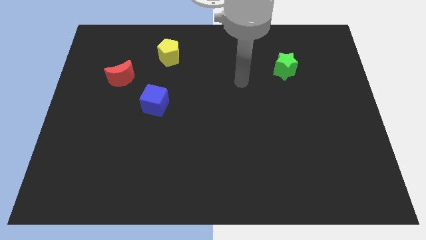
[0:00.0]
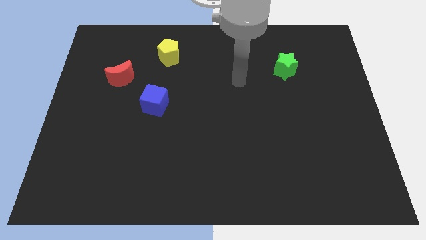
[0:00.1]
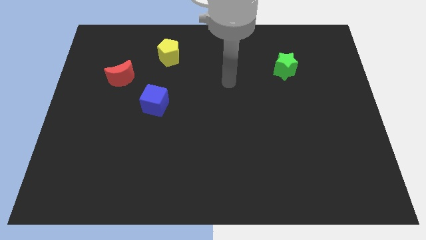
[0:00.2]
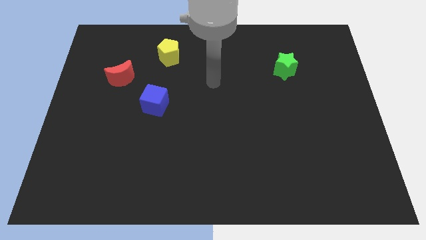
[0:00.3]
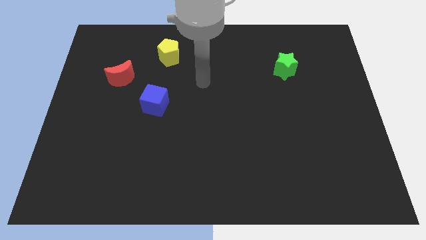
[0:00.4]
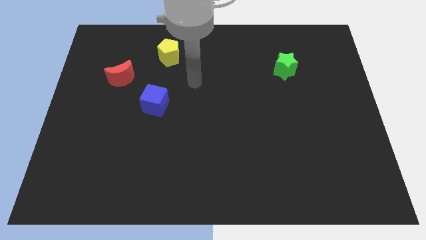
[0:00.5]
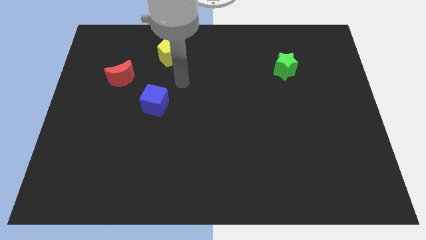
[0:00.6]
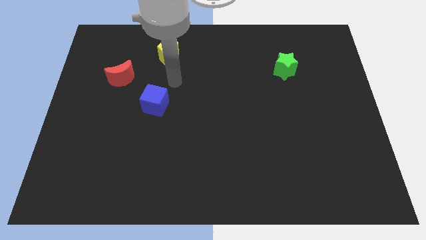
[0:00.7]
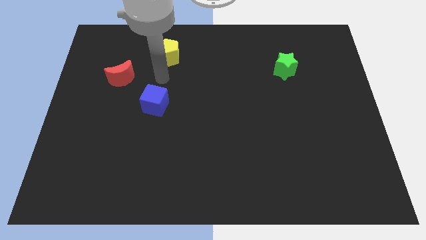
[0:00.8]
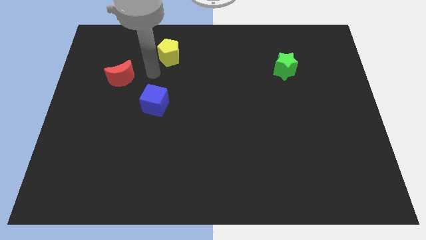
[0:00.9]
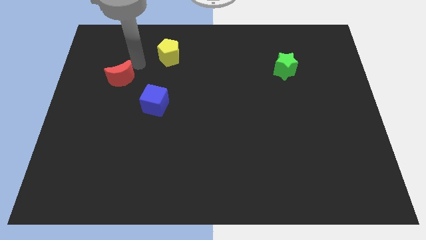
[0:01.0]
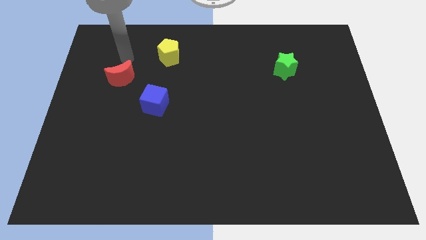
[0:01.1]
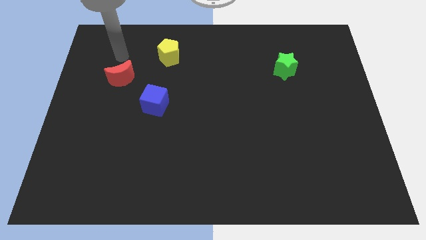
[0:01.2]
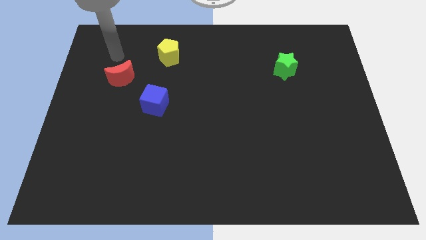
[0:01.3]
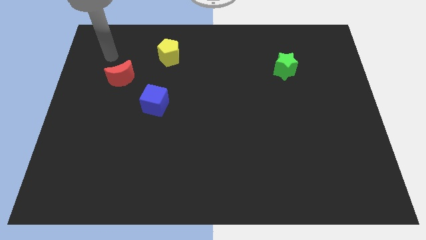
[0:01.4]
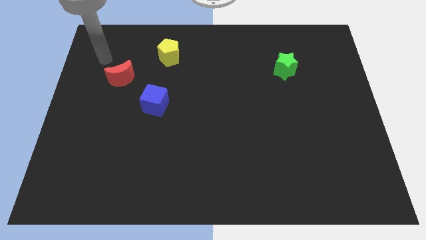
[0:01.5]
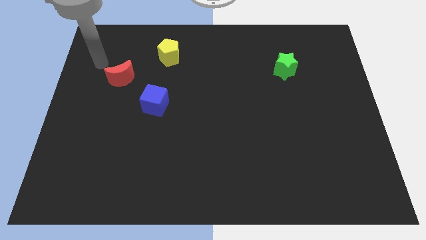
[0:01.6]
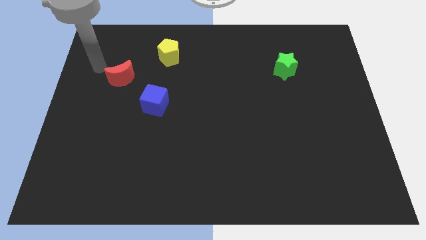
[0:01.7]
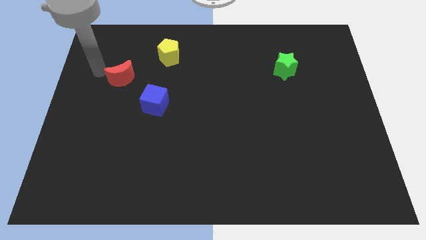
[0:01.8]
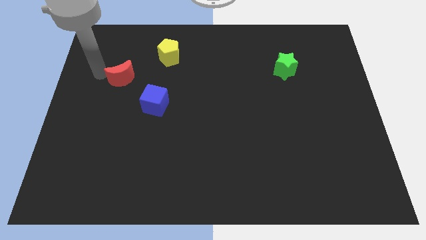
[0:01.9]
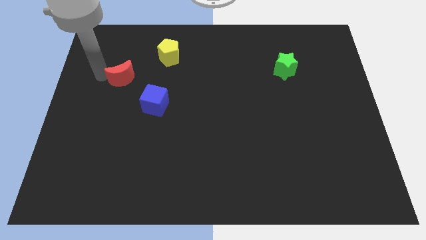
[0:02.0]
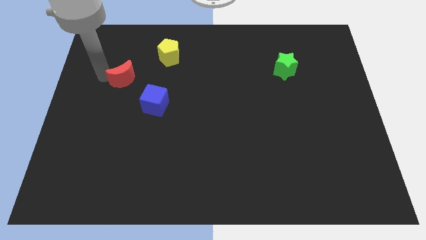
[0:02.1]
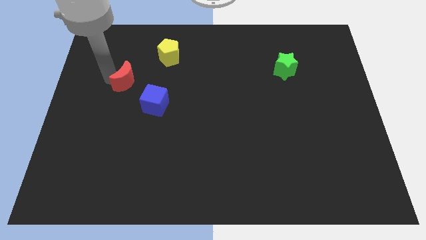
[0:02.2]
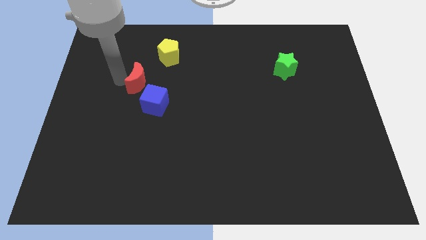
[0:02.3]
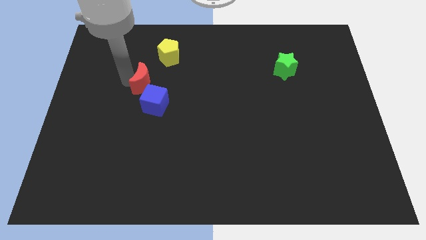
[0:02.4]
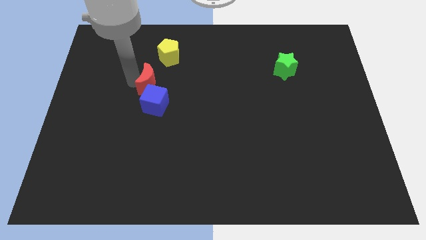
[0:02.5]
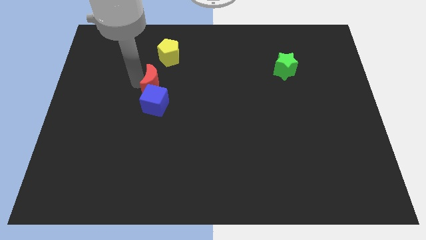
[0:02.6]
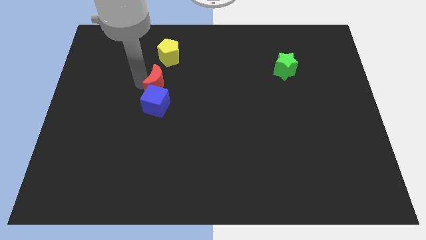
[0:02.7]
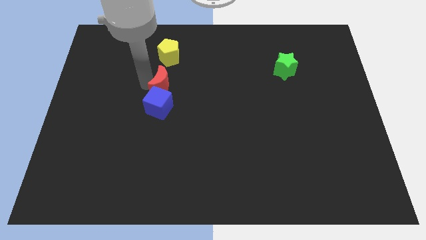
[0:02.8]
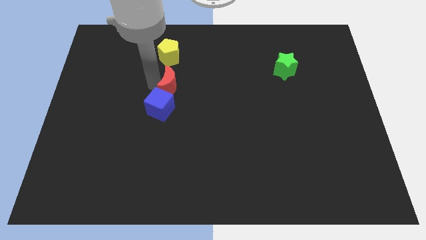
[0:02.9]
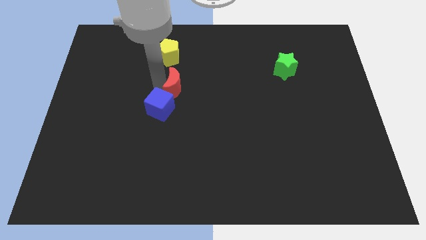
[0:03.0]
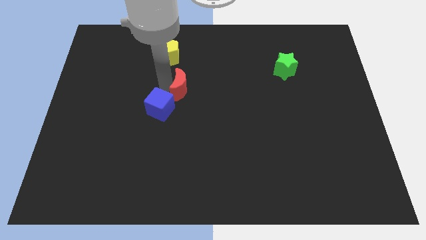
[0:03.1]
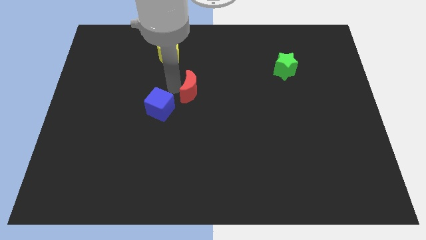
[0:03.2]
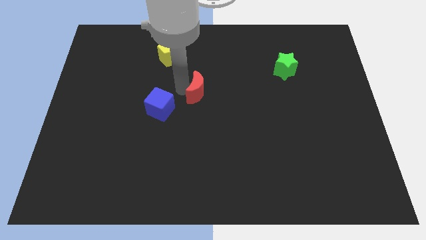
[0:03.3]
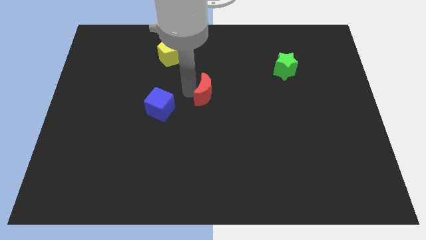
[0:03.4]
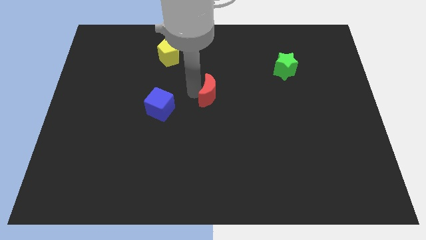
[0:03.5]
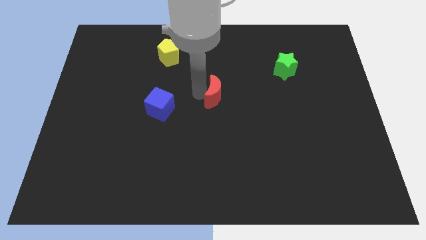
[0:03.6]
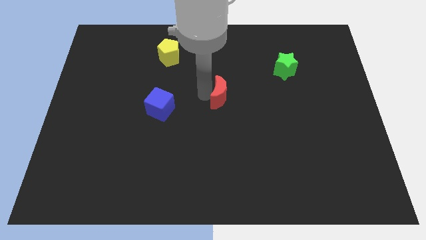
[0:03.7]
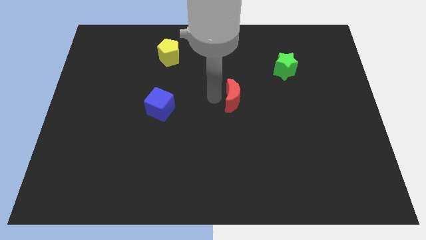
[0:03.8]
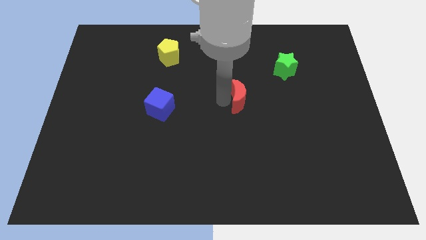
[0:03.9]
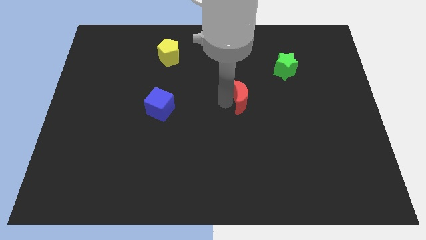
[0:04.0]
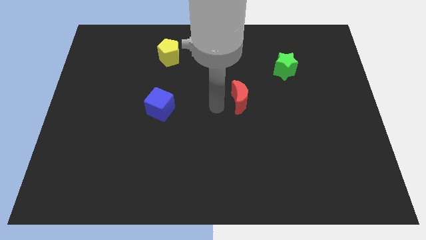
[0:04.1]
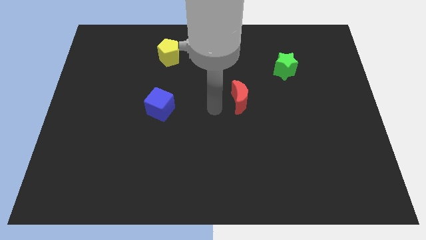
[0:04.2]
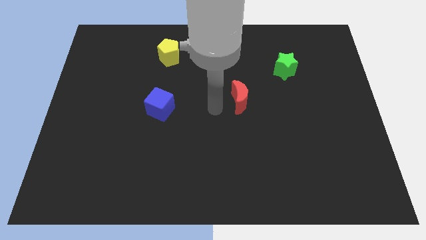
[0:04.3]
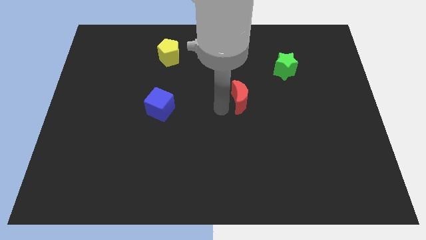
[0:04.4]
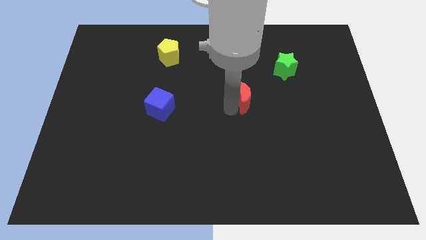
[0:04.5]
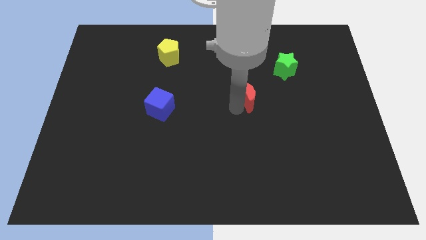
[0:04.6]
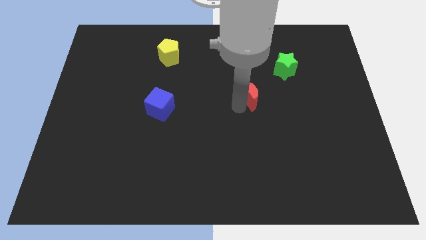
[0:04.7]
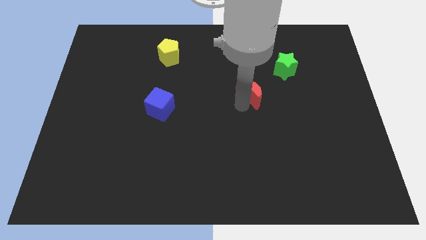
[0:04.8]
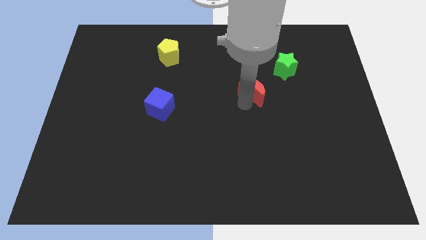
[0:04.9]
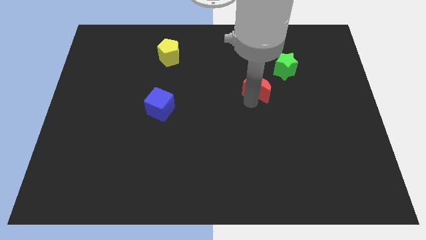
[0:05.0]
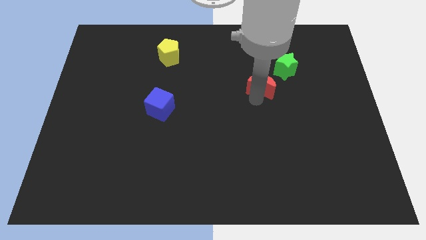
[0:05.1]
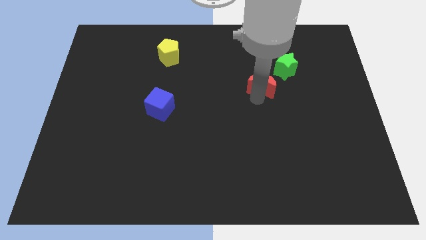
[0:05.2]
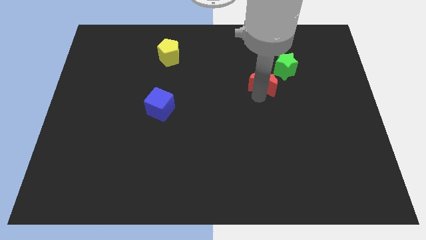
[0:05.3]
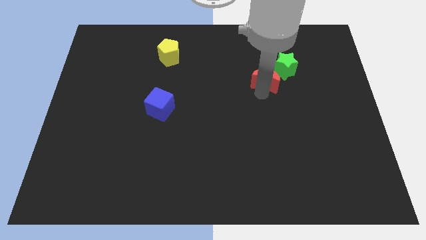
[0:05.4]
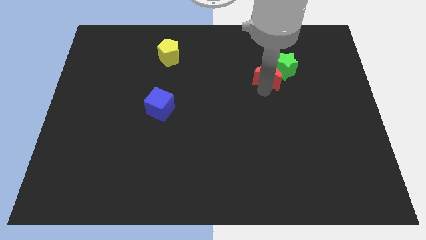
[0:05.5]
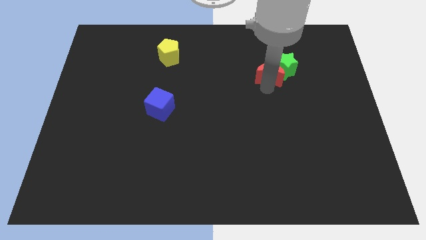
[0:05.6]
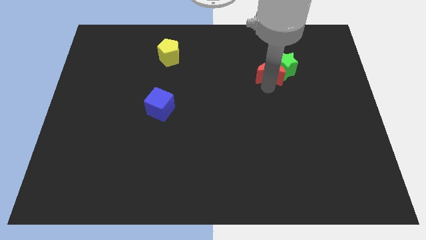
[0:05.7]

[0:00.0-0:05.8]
move the red moon close to the green block

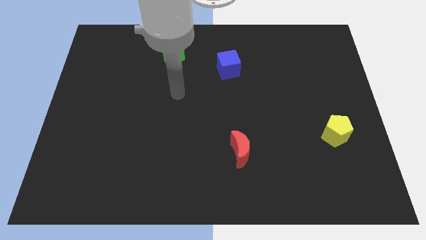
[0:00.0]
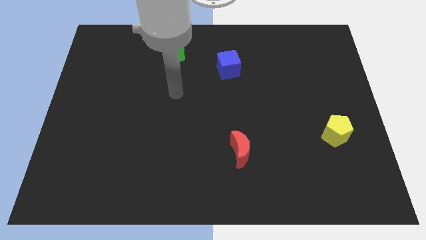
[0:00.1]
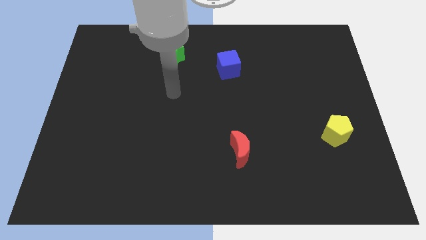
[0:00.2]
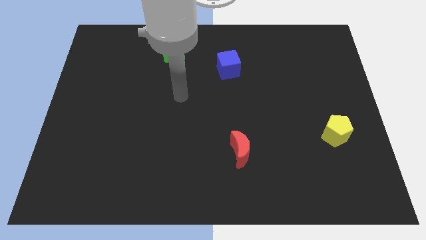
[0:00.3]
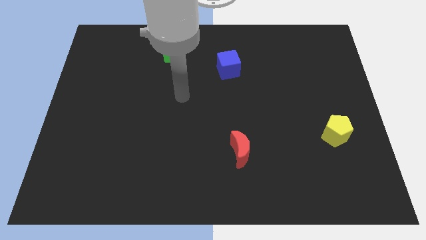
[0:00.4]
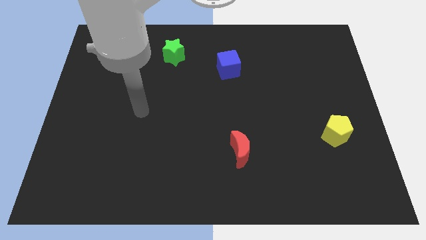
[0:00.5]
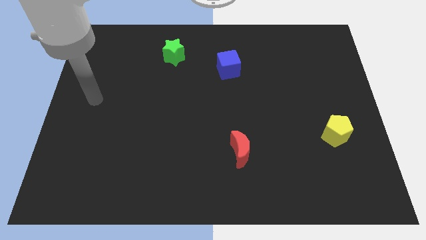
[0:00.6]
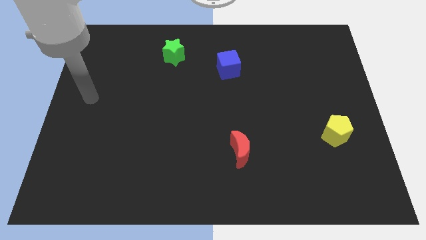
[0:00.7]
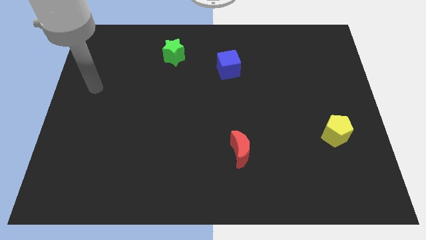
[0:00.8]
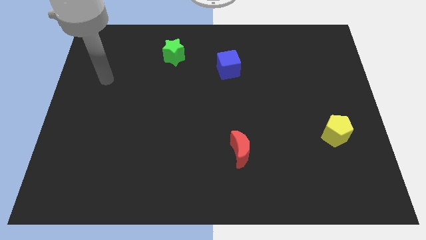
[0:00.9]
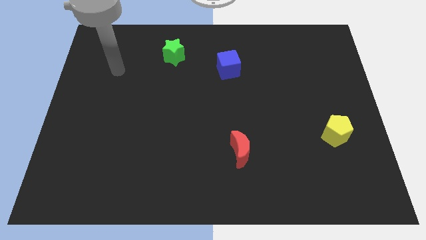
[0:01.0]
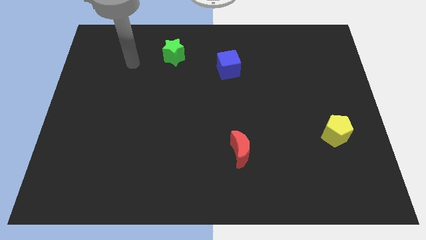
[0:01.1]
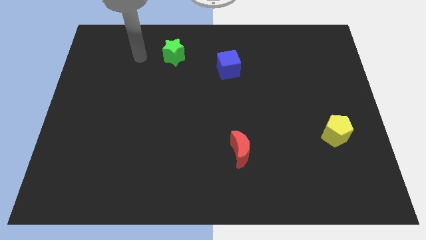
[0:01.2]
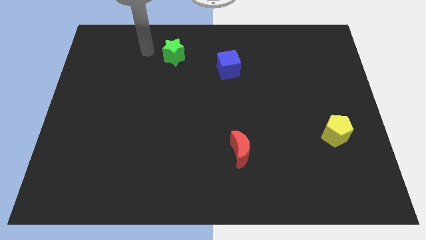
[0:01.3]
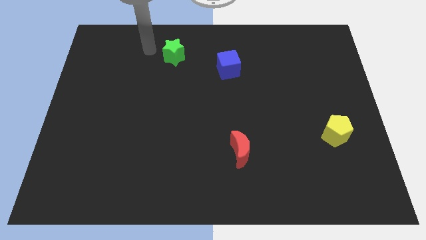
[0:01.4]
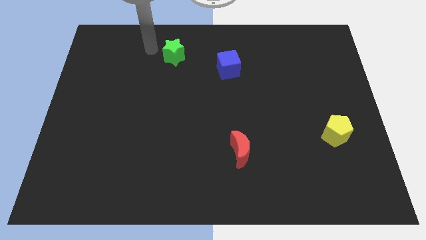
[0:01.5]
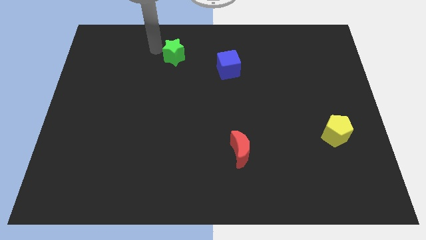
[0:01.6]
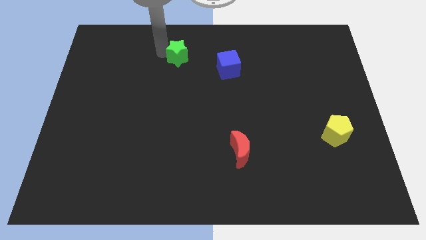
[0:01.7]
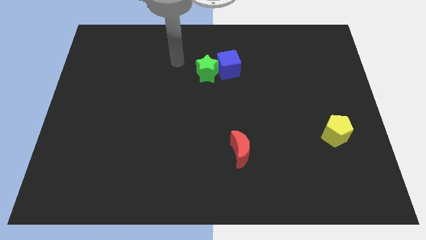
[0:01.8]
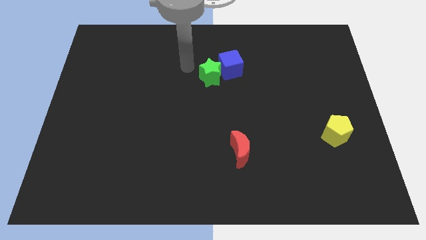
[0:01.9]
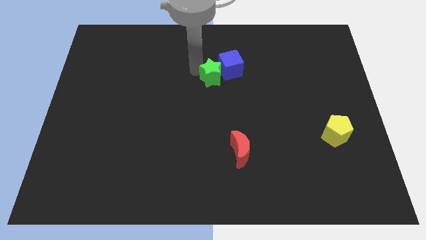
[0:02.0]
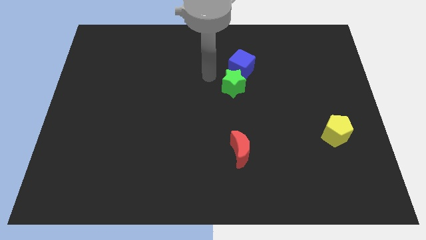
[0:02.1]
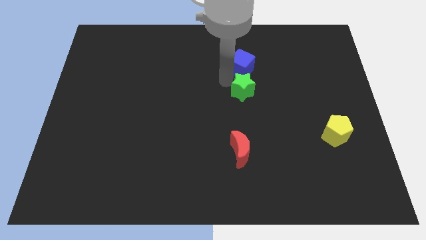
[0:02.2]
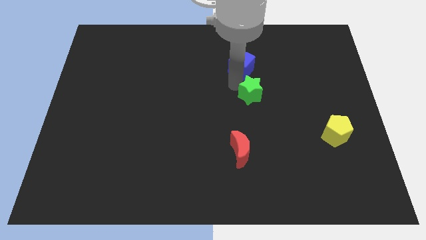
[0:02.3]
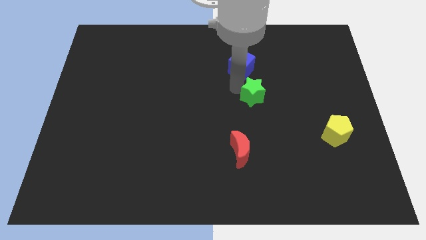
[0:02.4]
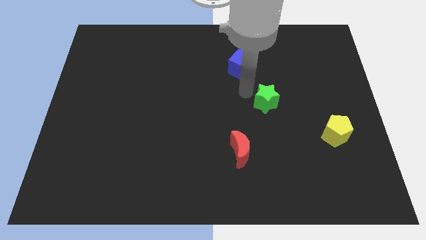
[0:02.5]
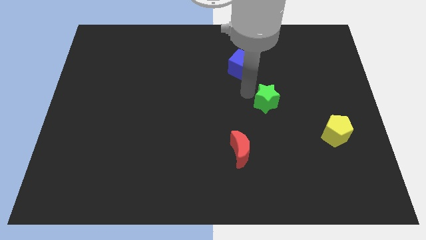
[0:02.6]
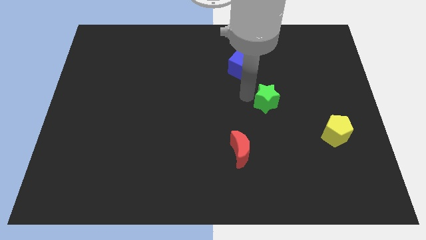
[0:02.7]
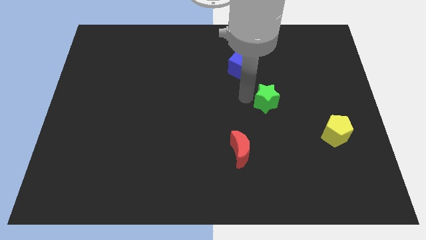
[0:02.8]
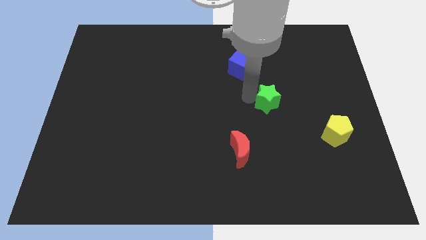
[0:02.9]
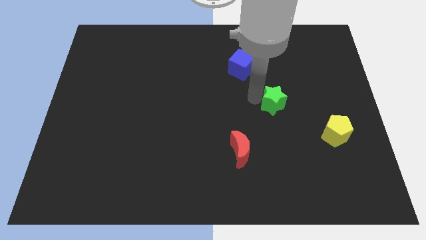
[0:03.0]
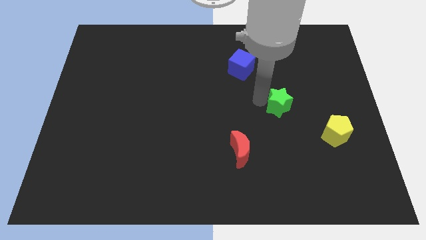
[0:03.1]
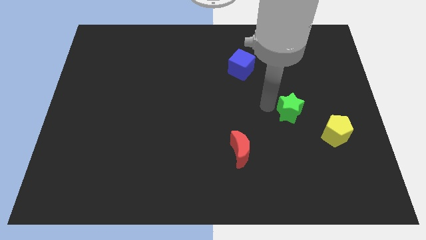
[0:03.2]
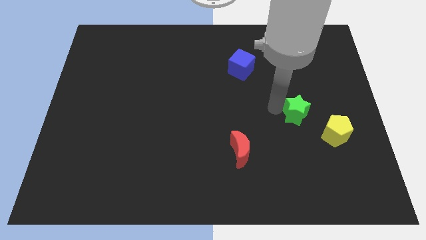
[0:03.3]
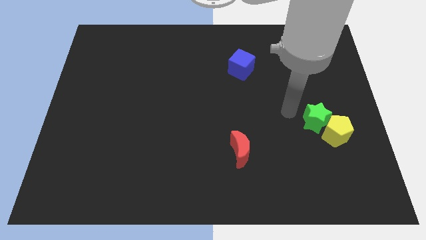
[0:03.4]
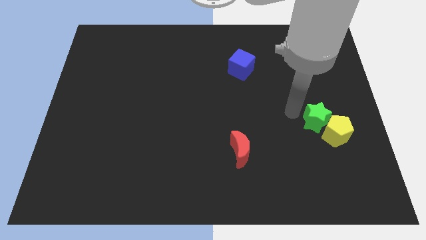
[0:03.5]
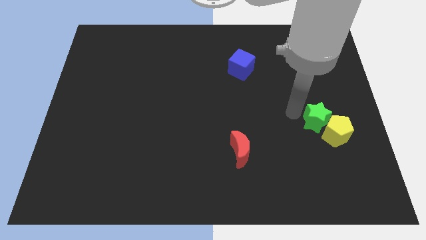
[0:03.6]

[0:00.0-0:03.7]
put the star next to the yellow block
